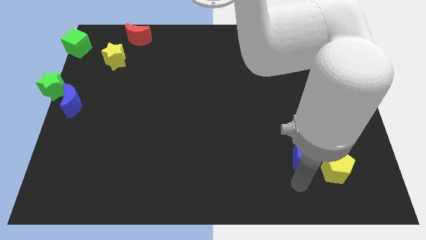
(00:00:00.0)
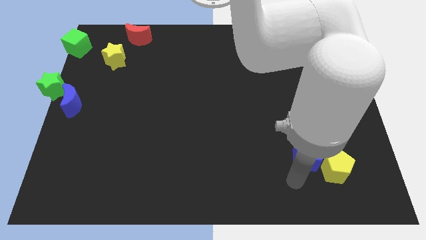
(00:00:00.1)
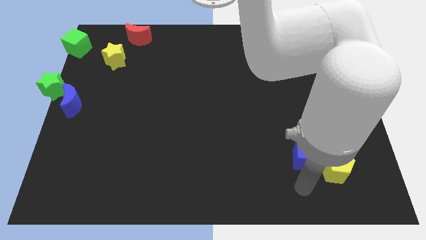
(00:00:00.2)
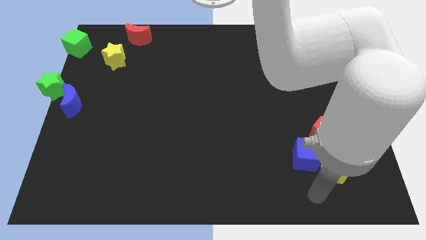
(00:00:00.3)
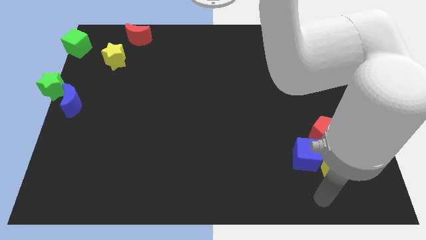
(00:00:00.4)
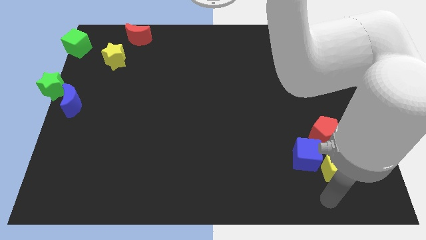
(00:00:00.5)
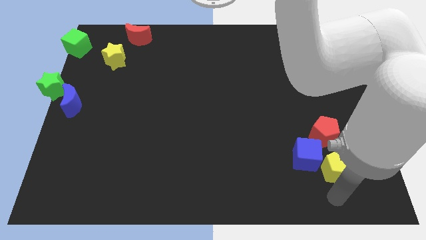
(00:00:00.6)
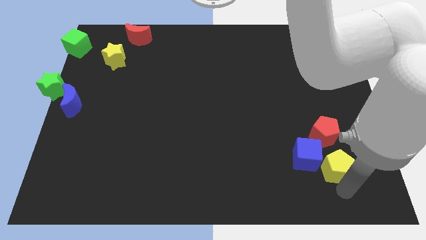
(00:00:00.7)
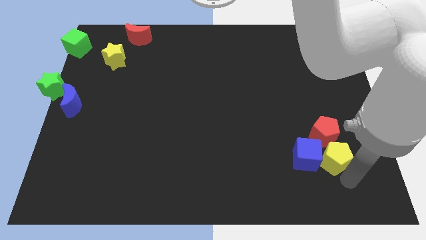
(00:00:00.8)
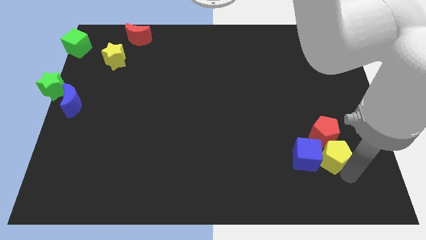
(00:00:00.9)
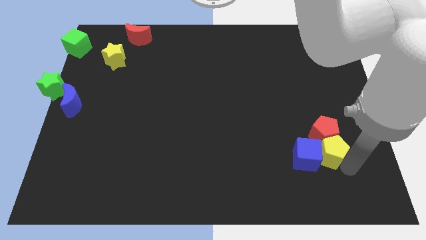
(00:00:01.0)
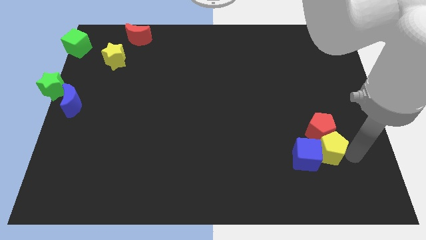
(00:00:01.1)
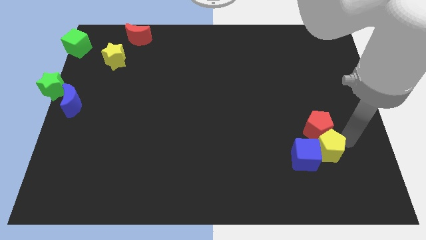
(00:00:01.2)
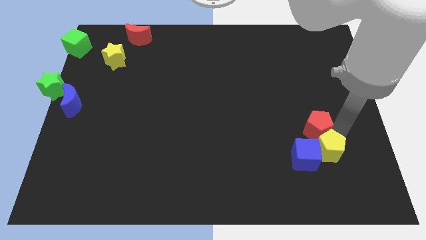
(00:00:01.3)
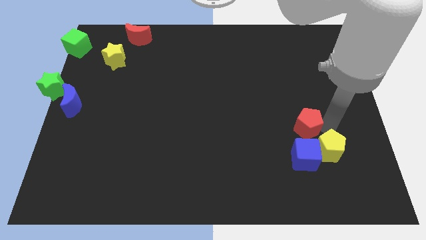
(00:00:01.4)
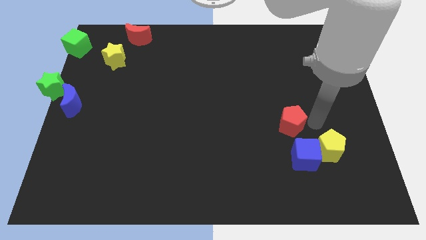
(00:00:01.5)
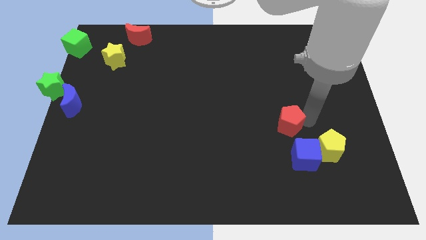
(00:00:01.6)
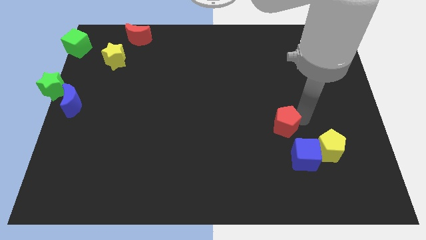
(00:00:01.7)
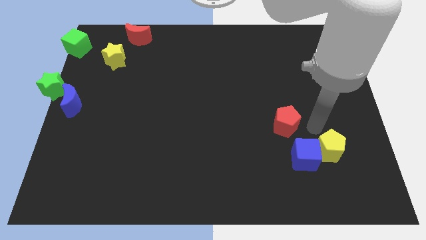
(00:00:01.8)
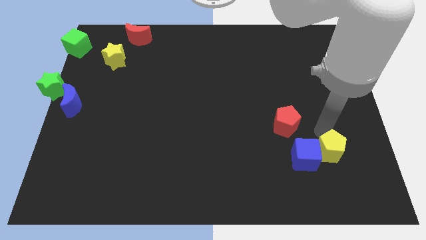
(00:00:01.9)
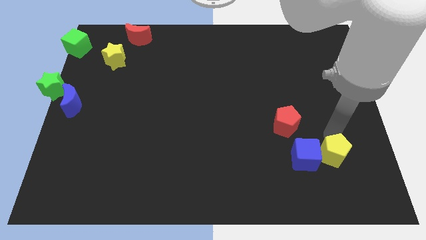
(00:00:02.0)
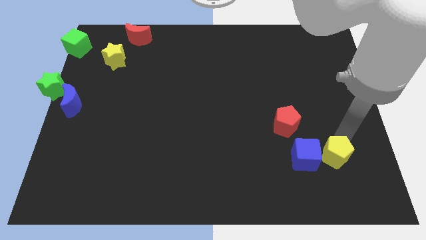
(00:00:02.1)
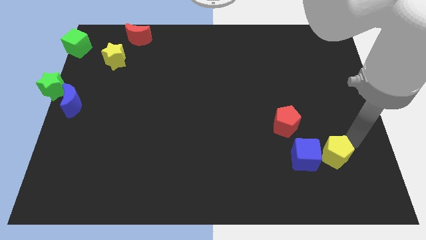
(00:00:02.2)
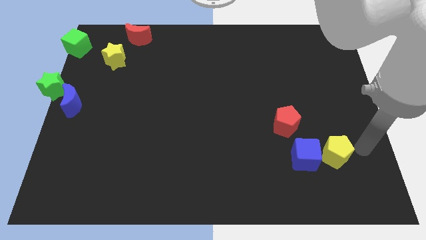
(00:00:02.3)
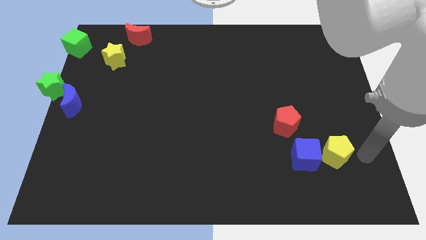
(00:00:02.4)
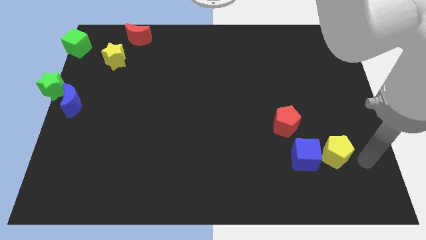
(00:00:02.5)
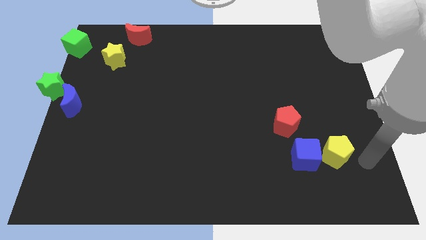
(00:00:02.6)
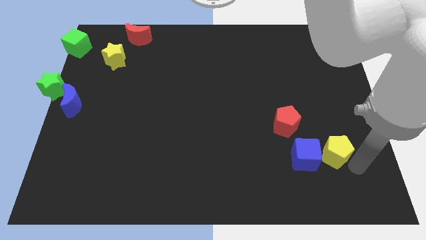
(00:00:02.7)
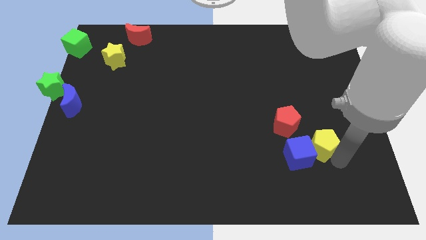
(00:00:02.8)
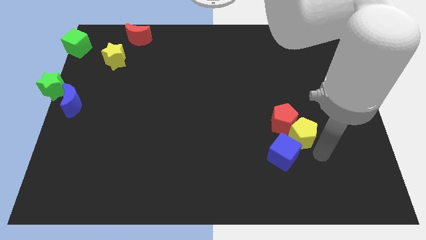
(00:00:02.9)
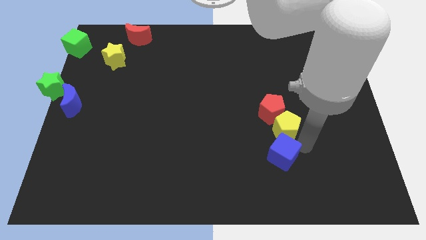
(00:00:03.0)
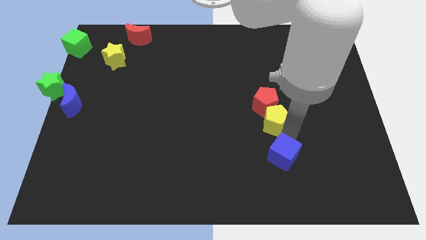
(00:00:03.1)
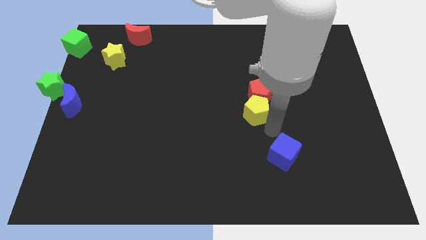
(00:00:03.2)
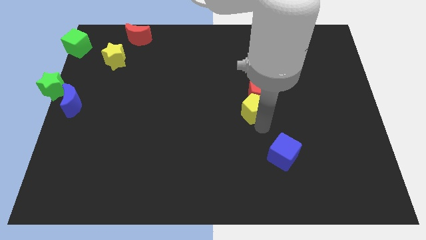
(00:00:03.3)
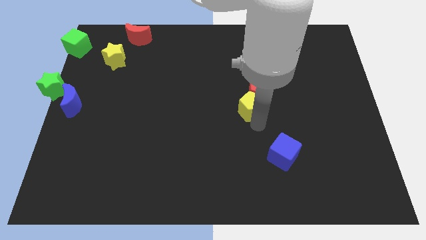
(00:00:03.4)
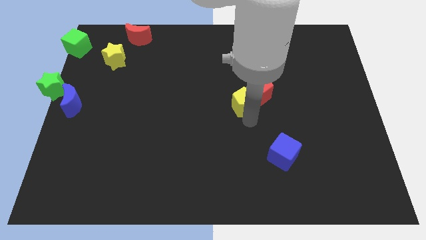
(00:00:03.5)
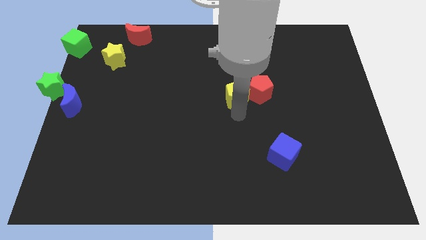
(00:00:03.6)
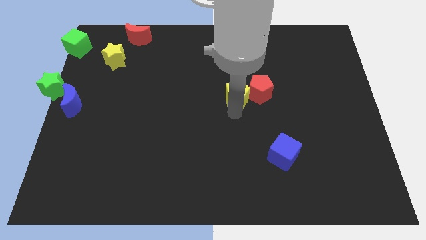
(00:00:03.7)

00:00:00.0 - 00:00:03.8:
move red and yellow pentagon slightly upwards of the board

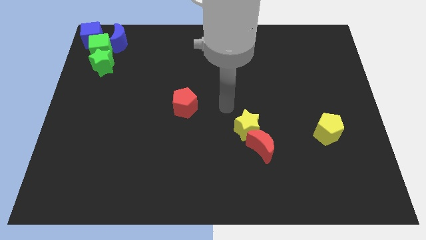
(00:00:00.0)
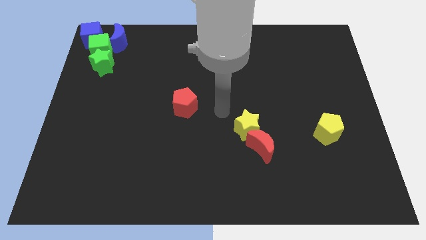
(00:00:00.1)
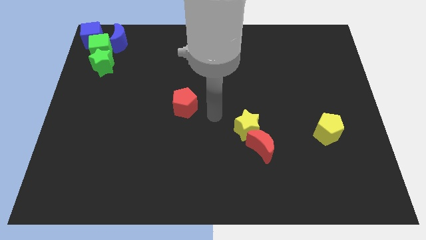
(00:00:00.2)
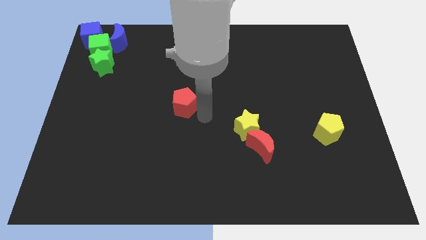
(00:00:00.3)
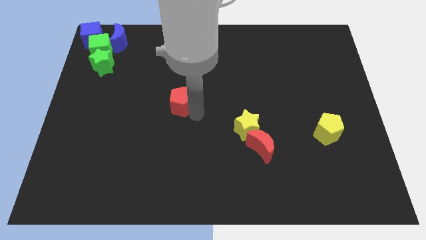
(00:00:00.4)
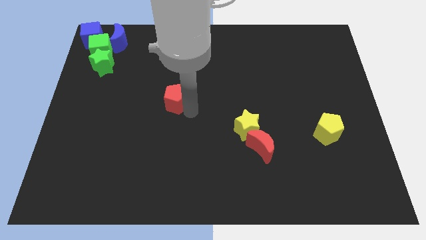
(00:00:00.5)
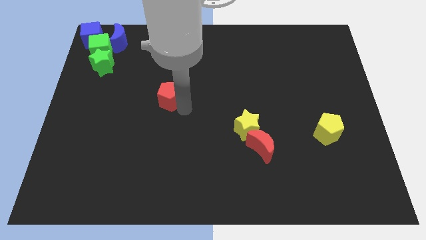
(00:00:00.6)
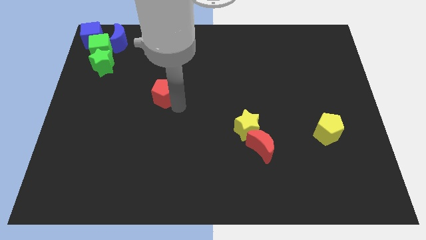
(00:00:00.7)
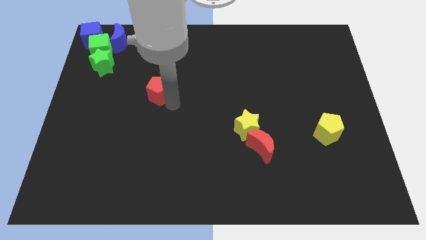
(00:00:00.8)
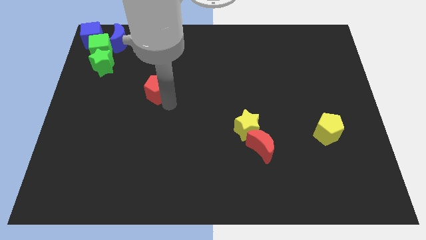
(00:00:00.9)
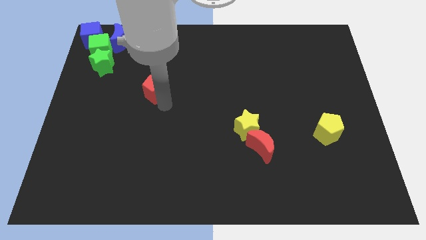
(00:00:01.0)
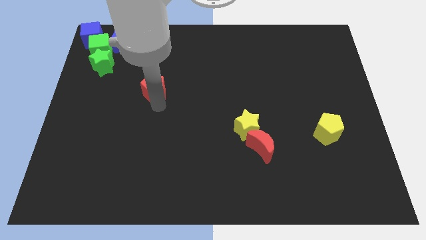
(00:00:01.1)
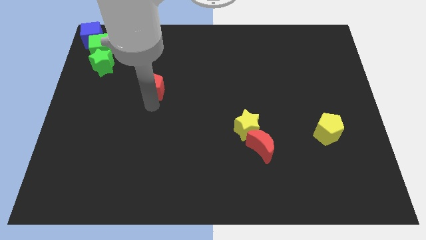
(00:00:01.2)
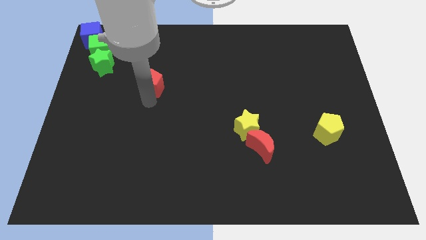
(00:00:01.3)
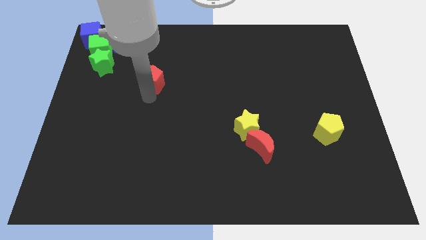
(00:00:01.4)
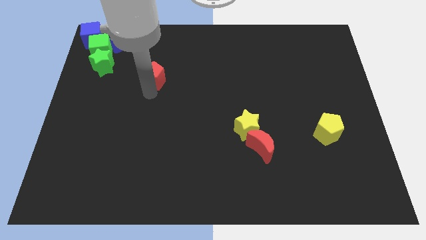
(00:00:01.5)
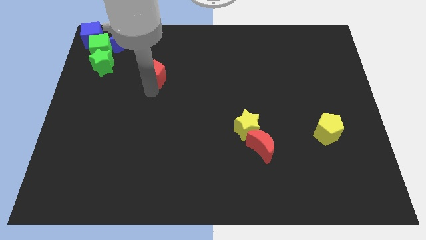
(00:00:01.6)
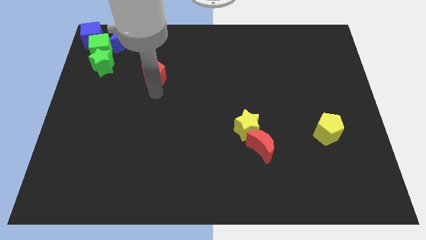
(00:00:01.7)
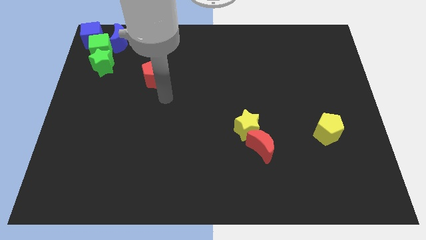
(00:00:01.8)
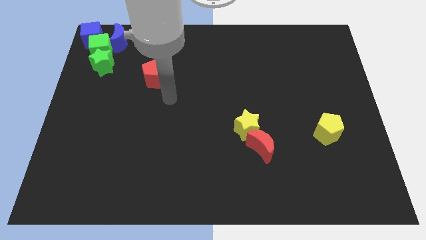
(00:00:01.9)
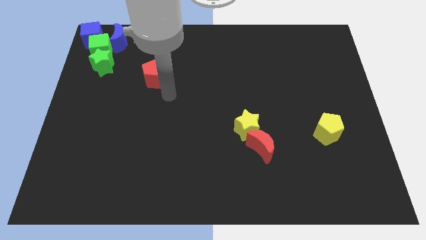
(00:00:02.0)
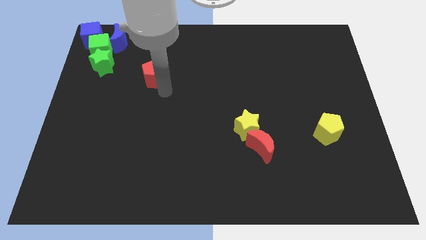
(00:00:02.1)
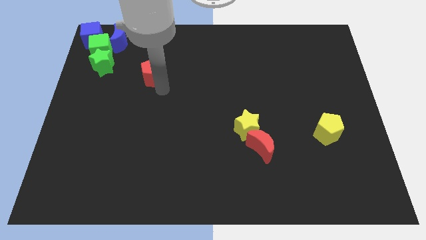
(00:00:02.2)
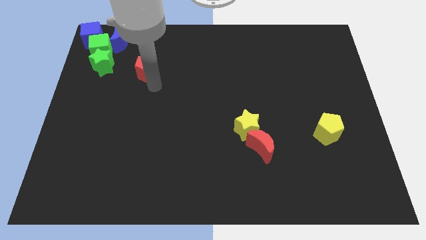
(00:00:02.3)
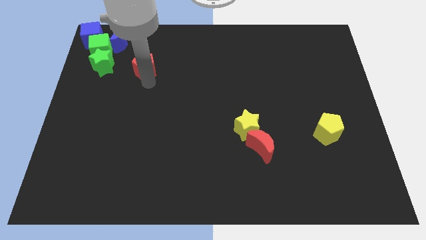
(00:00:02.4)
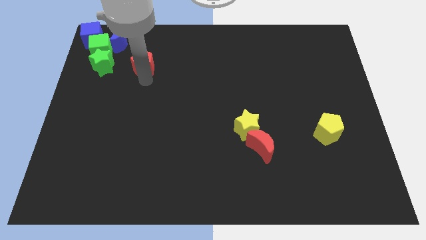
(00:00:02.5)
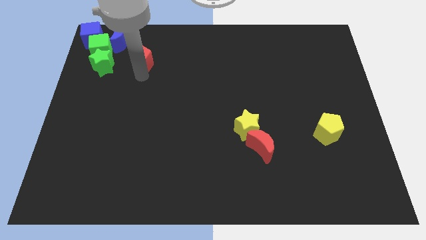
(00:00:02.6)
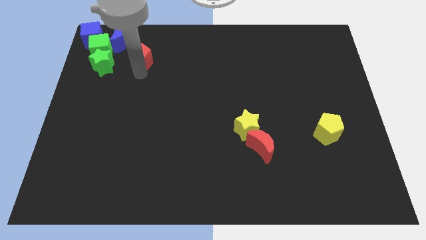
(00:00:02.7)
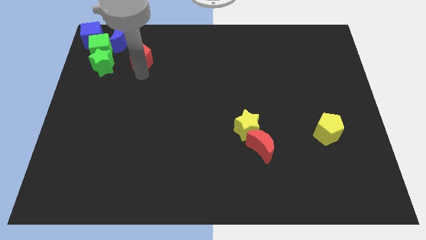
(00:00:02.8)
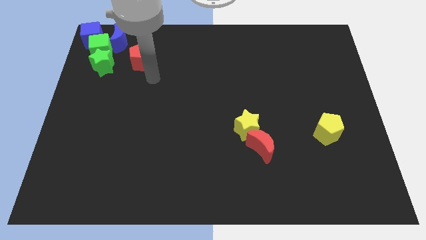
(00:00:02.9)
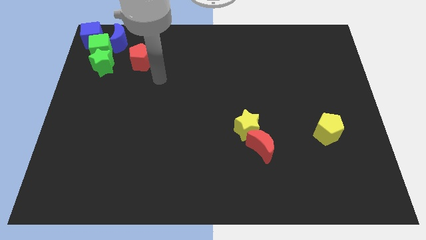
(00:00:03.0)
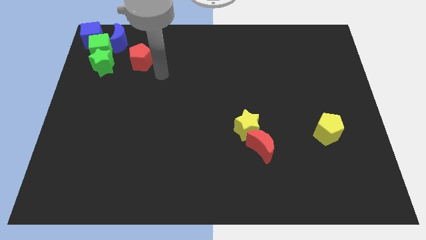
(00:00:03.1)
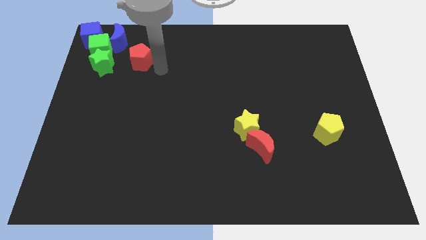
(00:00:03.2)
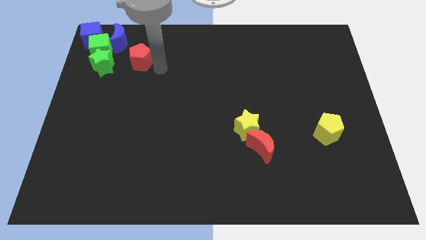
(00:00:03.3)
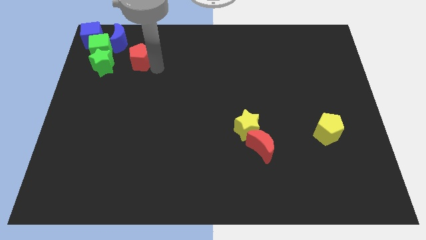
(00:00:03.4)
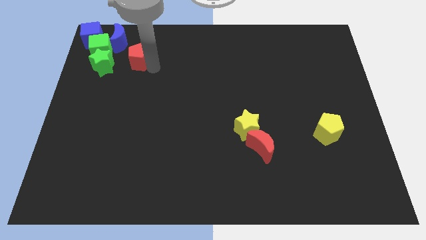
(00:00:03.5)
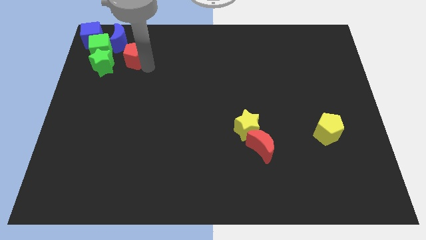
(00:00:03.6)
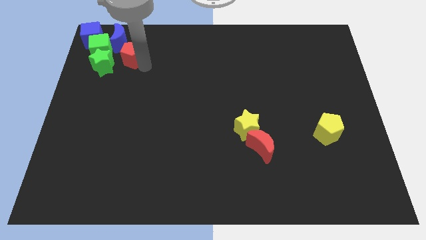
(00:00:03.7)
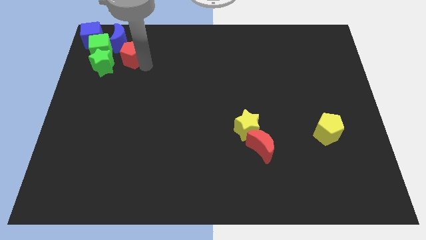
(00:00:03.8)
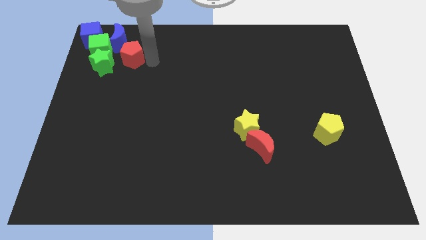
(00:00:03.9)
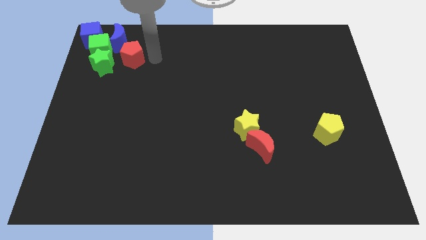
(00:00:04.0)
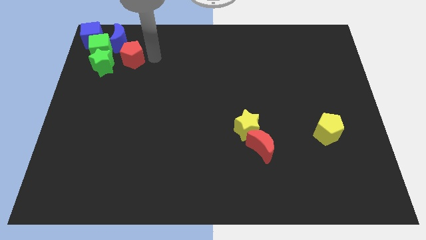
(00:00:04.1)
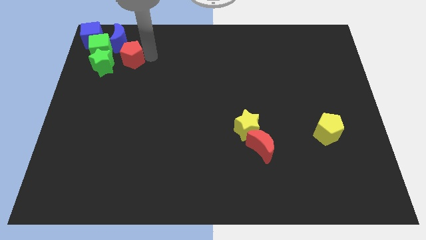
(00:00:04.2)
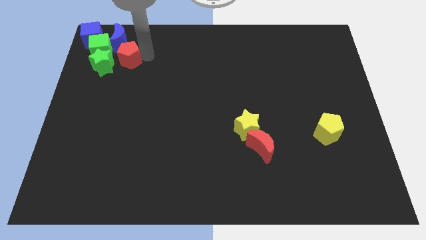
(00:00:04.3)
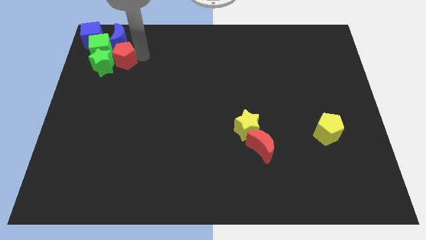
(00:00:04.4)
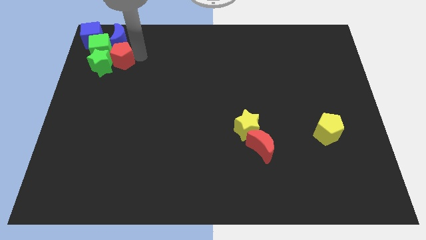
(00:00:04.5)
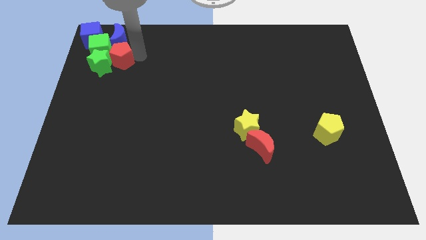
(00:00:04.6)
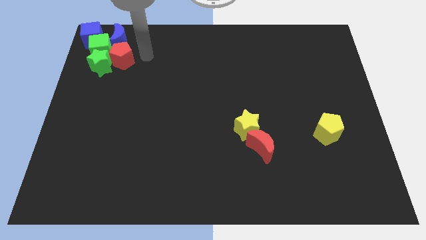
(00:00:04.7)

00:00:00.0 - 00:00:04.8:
move the red pentagon into the green star

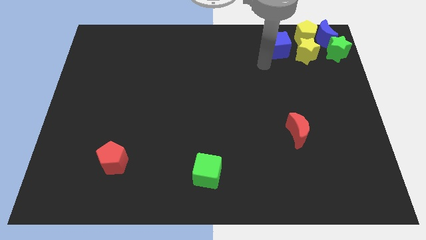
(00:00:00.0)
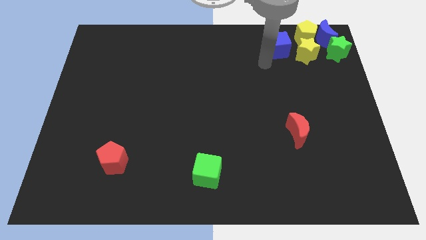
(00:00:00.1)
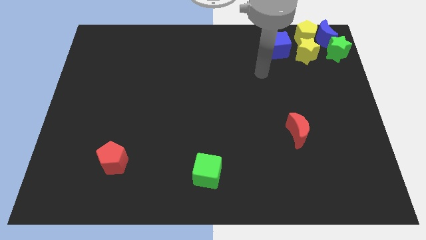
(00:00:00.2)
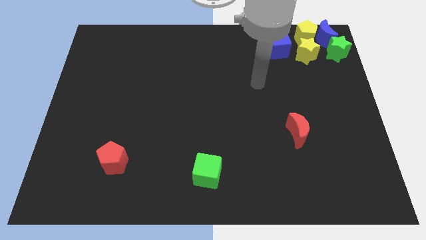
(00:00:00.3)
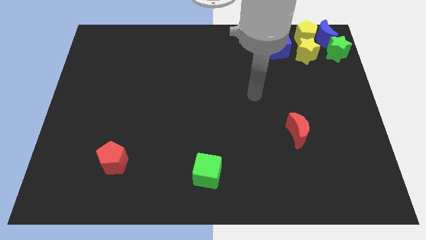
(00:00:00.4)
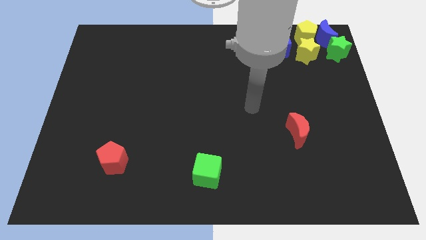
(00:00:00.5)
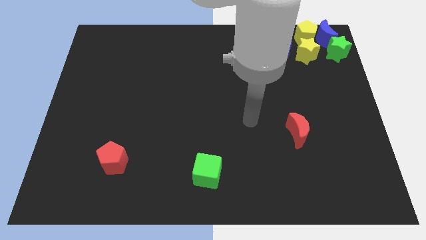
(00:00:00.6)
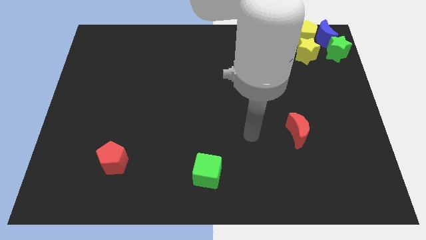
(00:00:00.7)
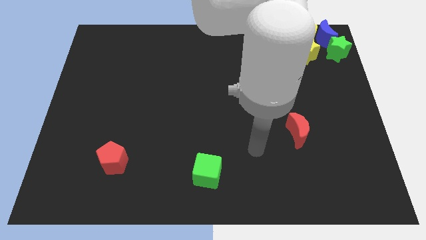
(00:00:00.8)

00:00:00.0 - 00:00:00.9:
move the arm away from the blue cube
